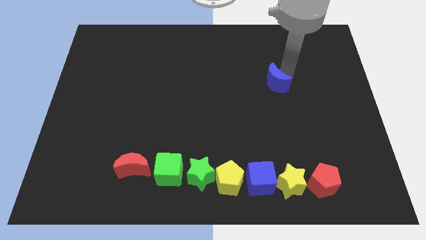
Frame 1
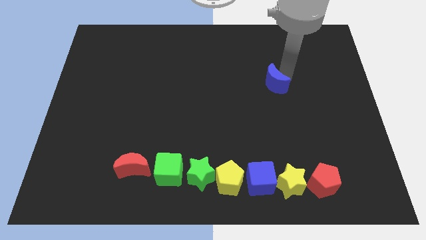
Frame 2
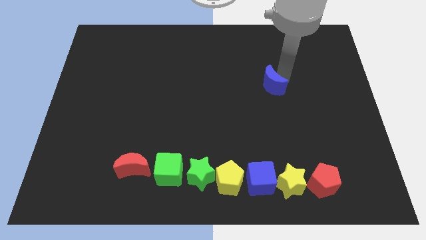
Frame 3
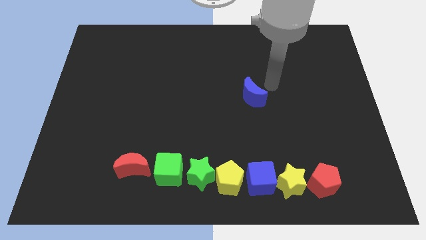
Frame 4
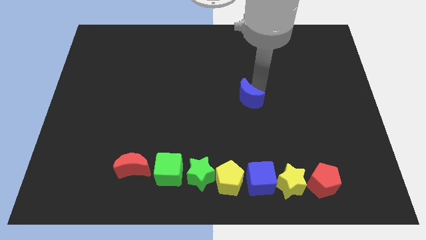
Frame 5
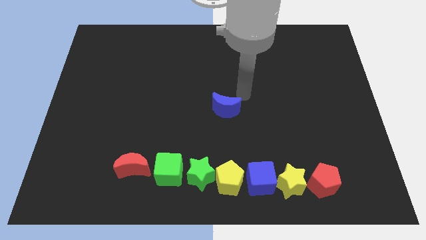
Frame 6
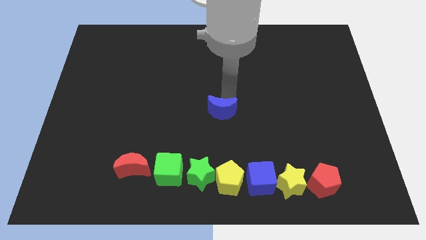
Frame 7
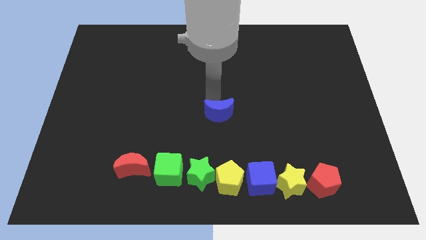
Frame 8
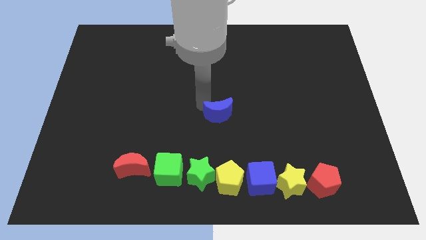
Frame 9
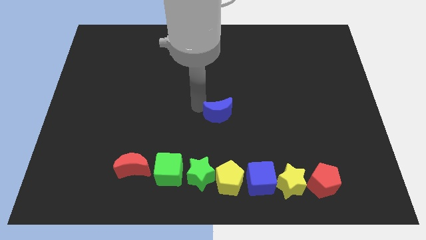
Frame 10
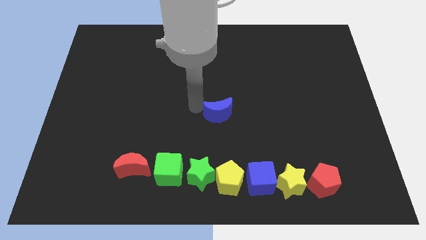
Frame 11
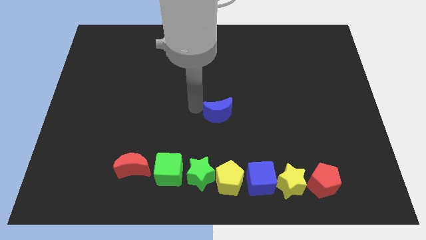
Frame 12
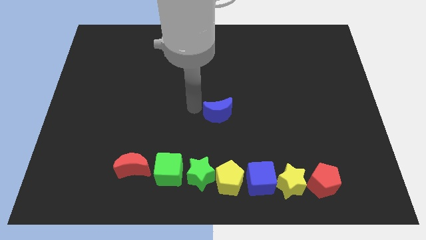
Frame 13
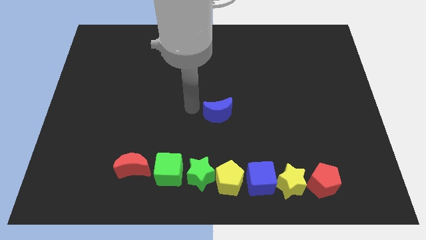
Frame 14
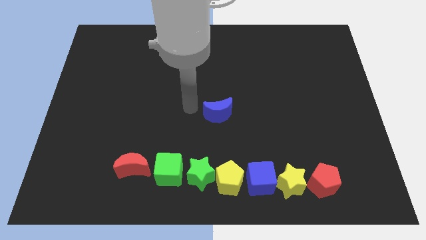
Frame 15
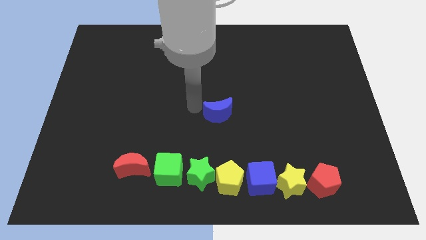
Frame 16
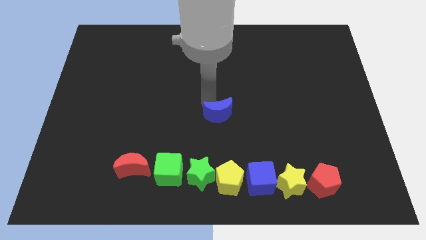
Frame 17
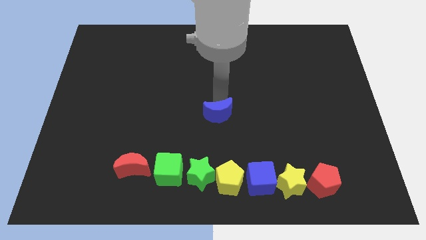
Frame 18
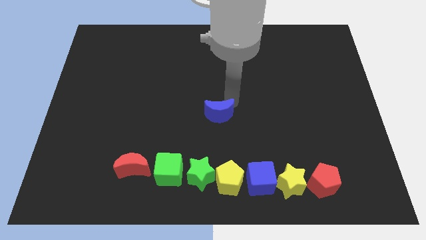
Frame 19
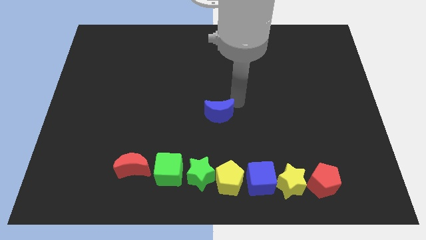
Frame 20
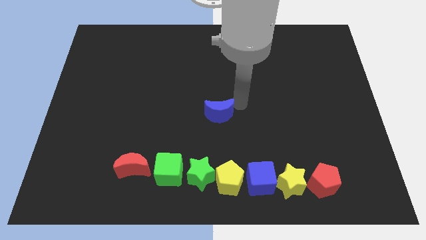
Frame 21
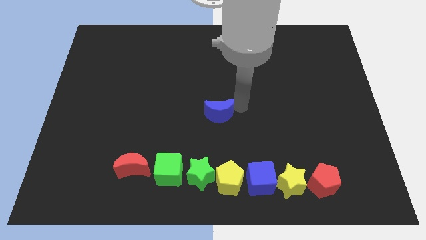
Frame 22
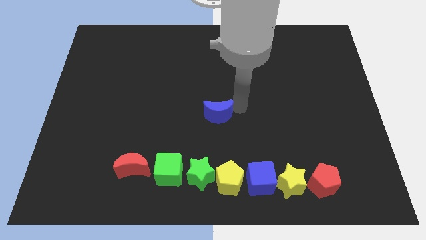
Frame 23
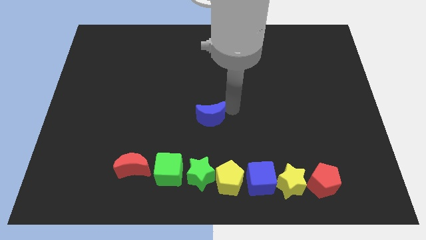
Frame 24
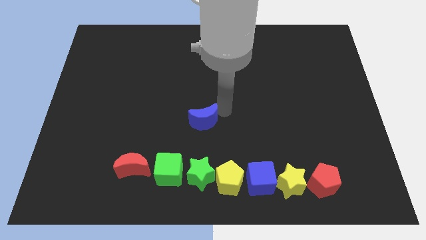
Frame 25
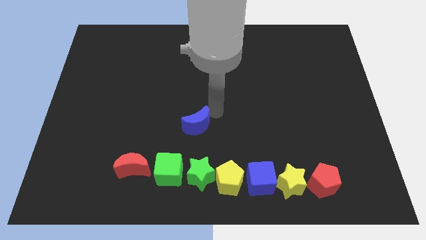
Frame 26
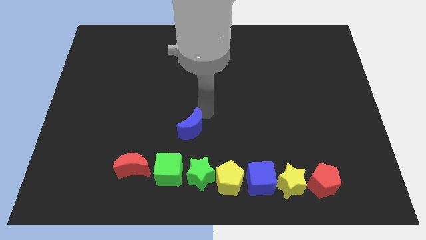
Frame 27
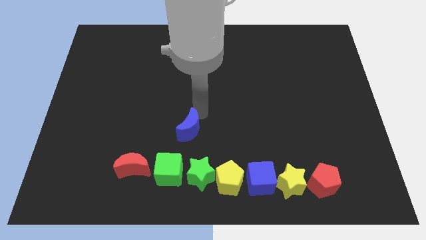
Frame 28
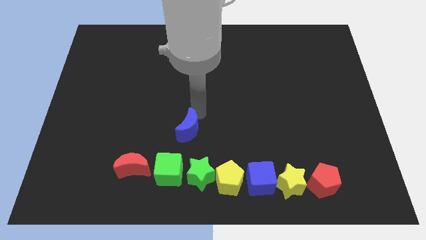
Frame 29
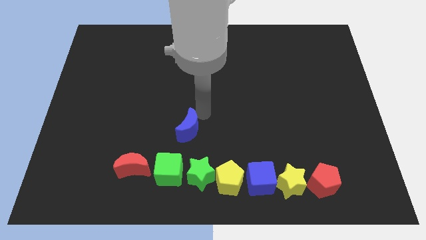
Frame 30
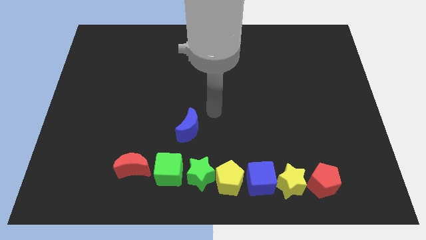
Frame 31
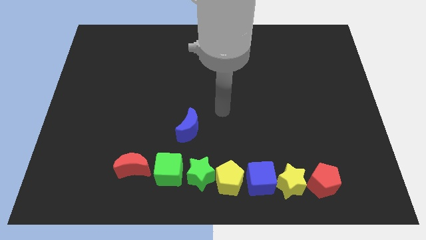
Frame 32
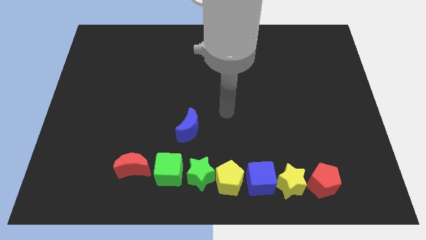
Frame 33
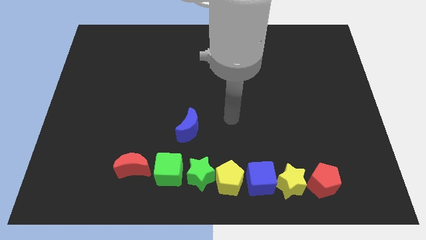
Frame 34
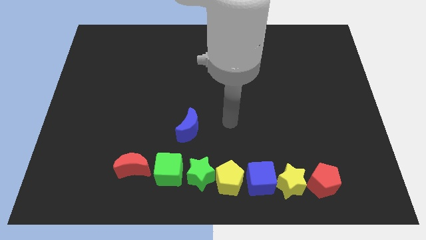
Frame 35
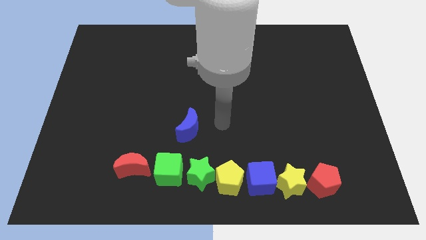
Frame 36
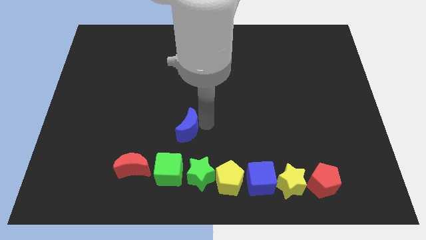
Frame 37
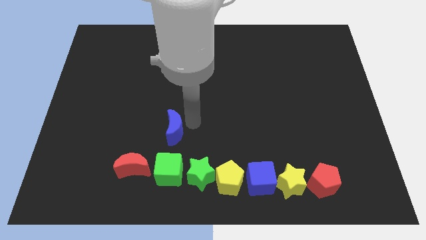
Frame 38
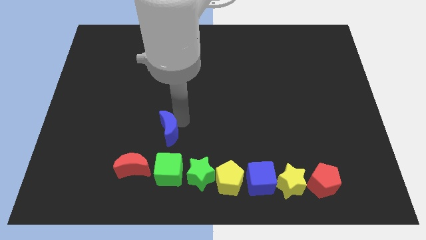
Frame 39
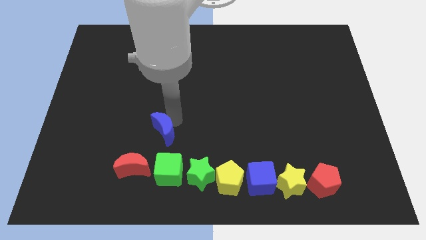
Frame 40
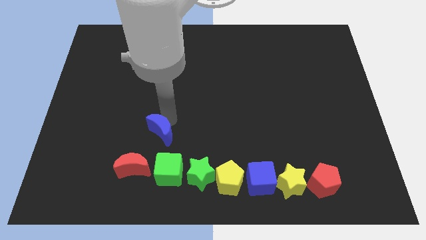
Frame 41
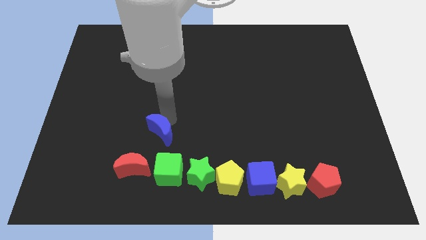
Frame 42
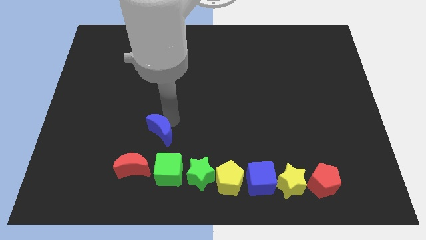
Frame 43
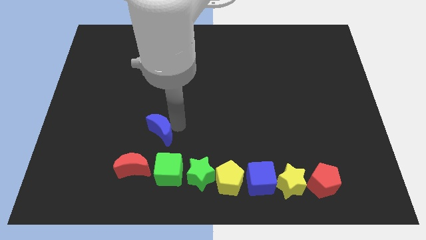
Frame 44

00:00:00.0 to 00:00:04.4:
place the blue crescent above the green cube

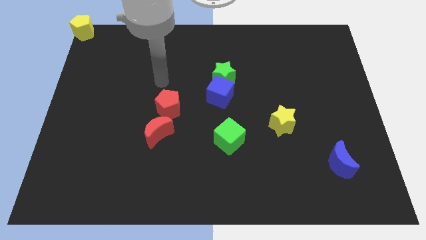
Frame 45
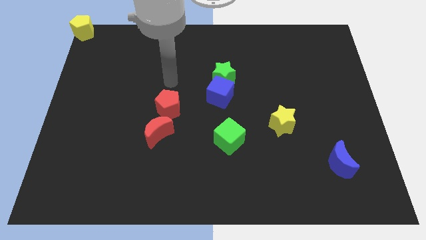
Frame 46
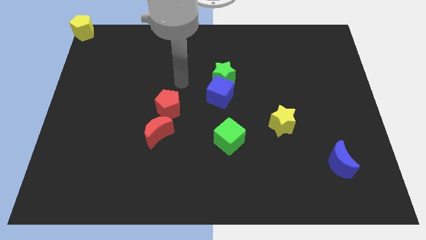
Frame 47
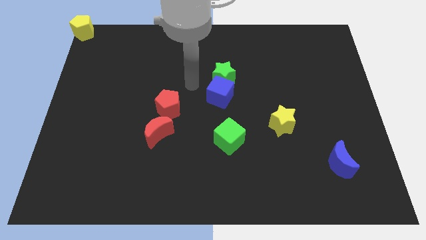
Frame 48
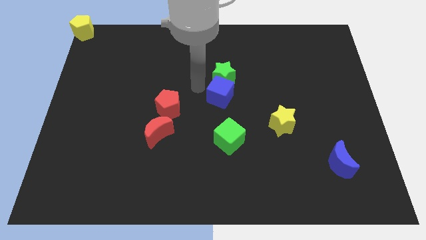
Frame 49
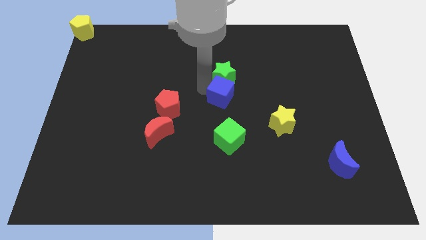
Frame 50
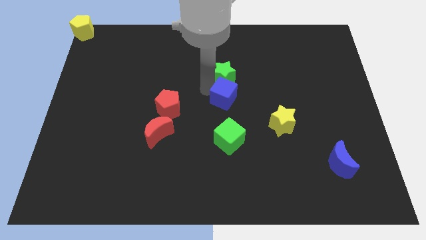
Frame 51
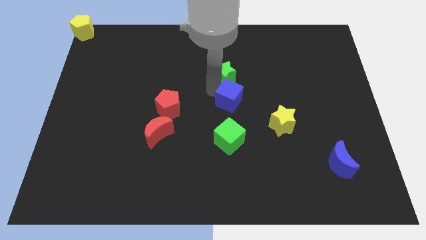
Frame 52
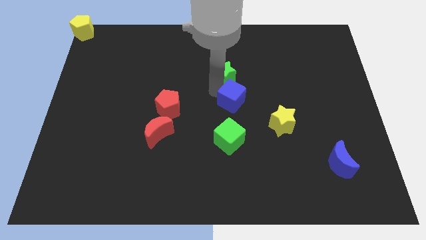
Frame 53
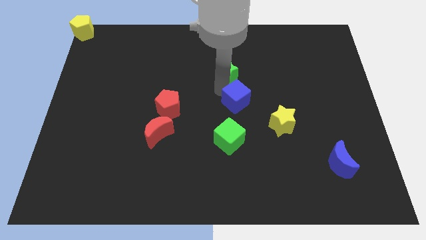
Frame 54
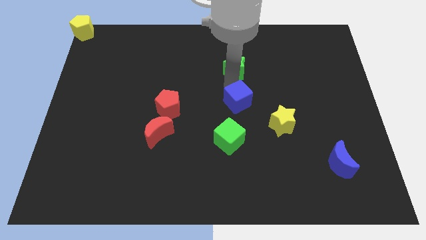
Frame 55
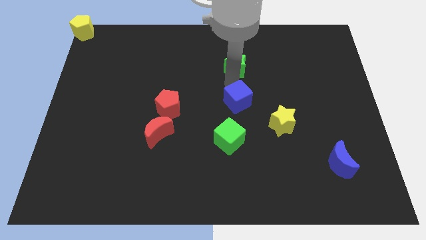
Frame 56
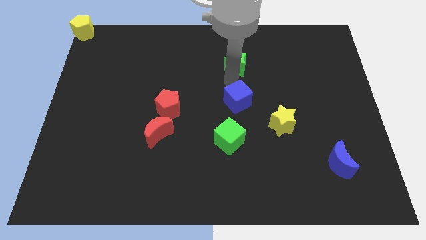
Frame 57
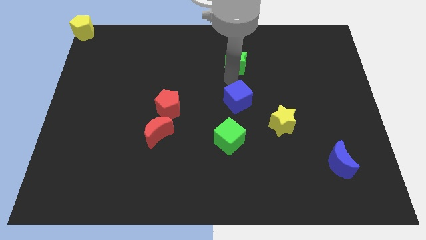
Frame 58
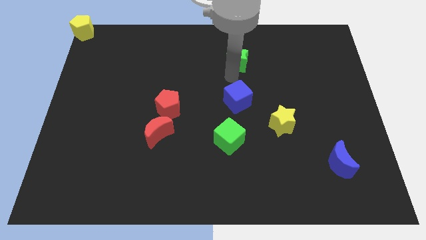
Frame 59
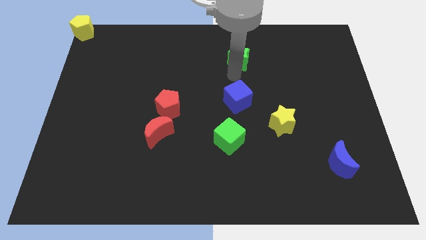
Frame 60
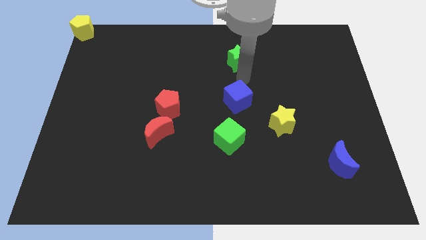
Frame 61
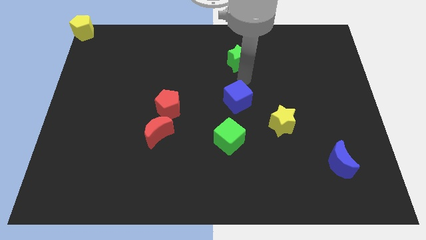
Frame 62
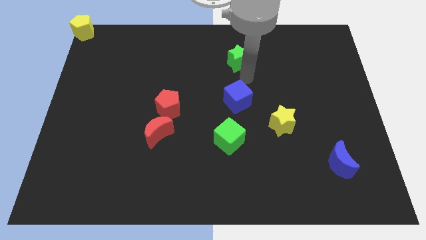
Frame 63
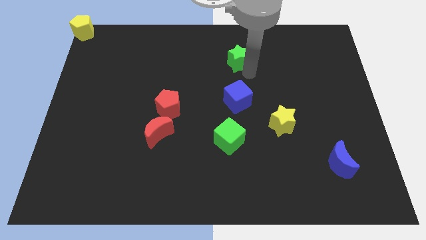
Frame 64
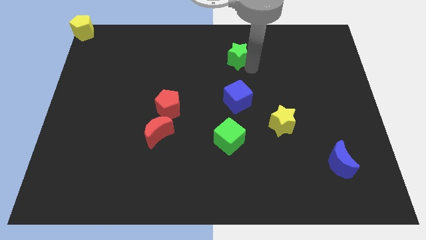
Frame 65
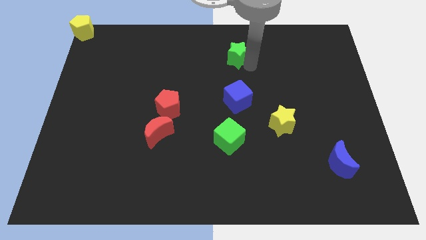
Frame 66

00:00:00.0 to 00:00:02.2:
push the green star up slightly

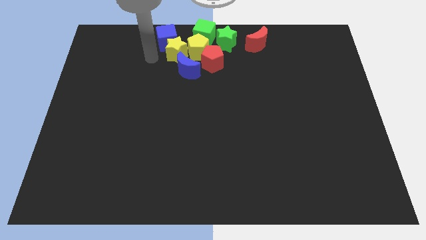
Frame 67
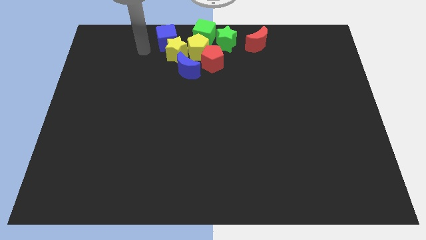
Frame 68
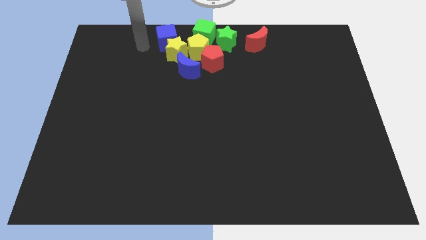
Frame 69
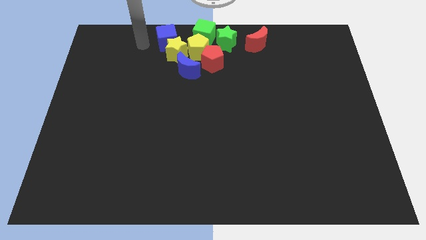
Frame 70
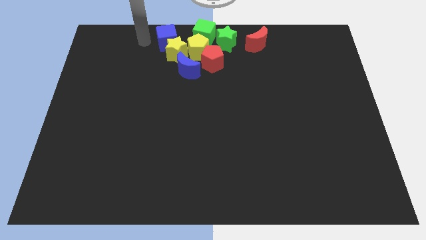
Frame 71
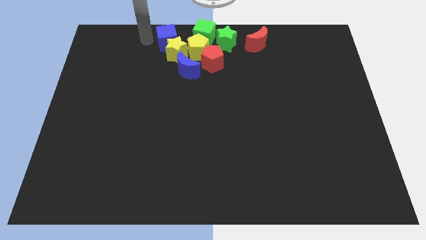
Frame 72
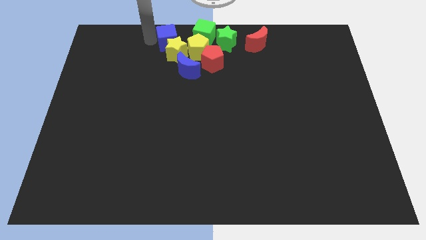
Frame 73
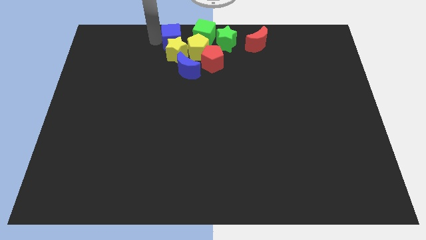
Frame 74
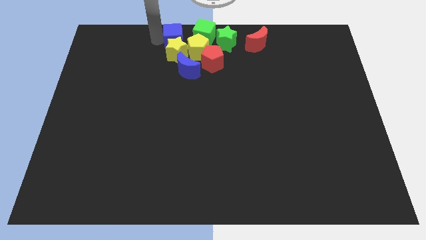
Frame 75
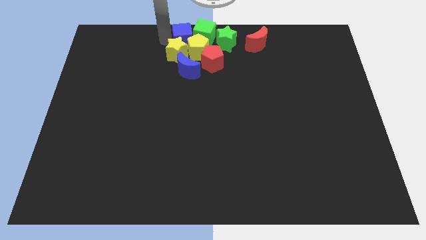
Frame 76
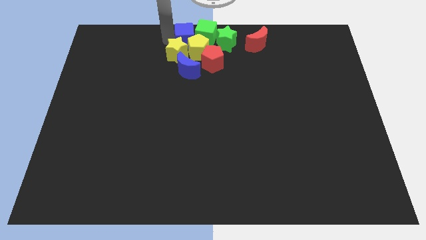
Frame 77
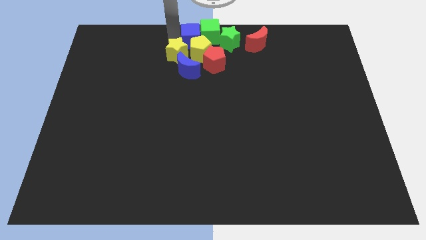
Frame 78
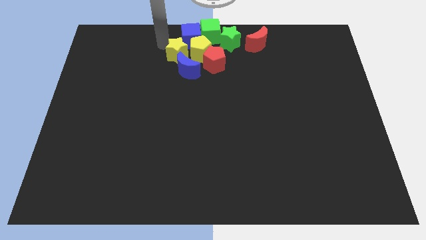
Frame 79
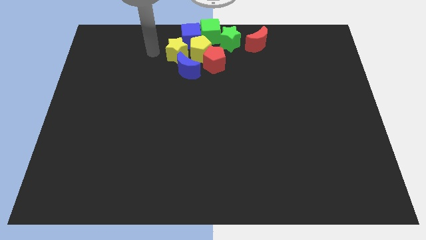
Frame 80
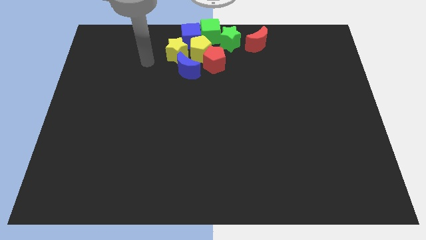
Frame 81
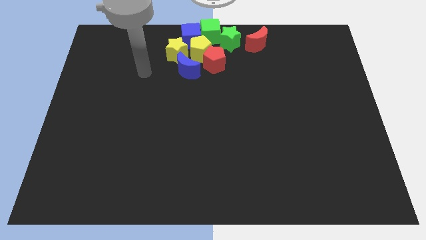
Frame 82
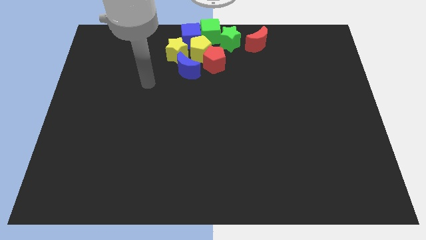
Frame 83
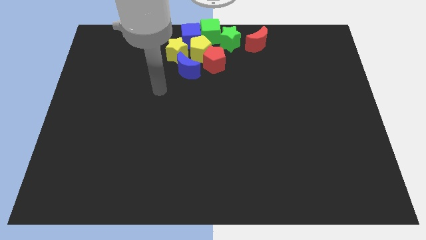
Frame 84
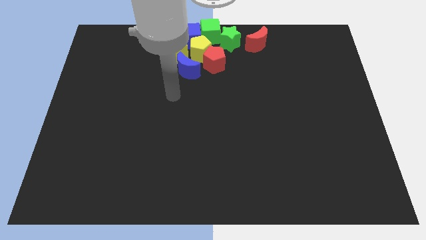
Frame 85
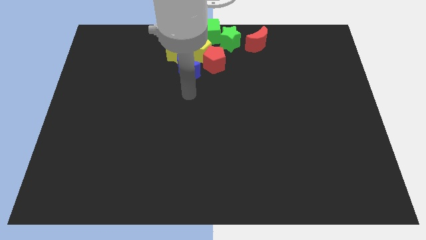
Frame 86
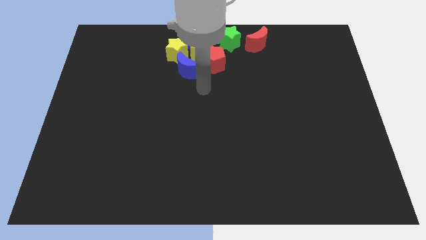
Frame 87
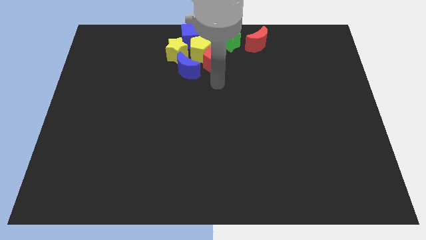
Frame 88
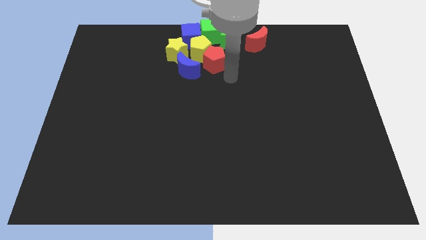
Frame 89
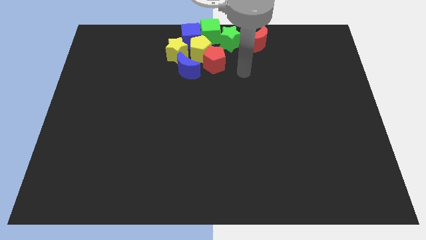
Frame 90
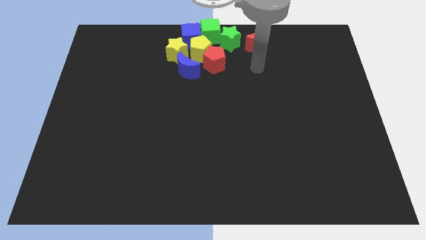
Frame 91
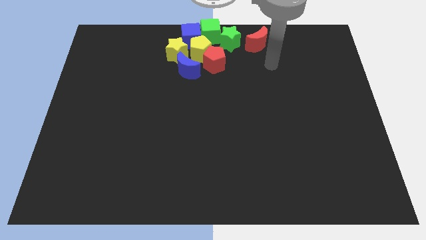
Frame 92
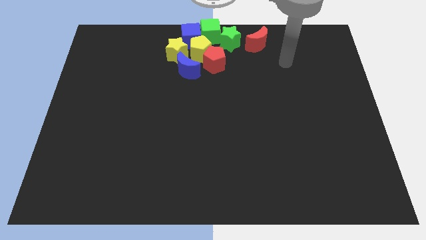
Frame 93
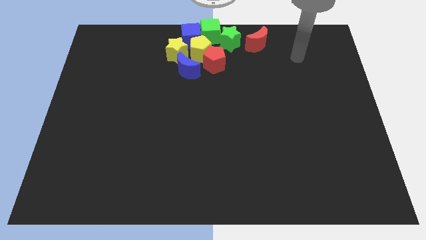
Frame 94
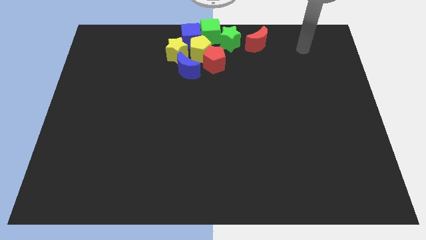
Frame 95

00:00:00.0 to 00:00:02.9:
push the blue cube into the green cube
